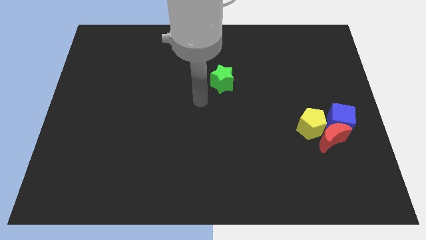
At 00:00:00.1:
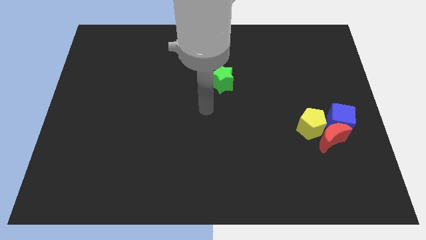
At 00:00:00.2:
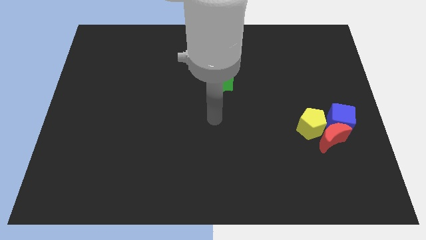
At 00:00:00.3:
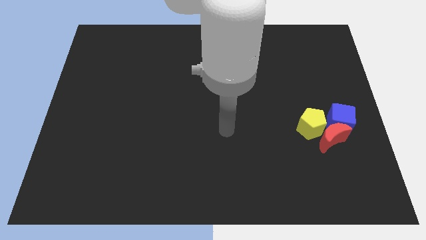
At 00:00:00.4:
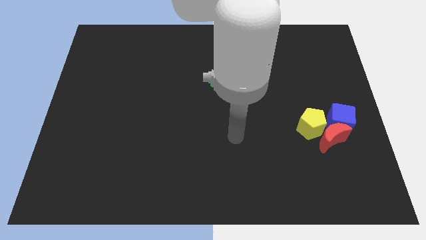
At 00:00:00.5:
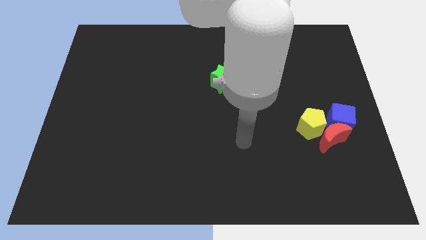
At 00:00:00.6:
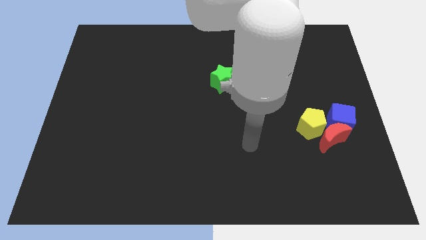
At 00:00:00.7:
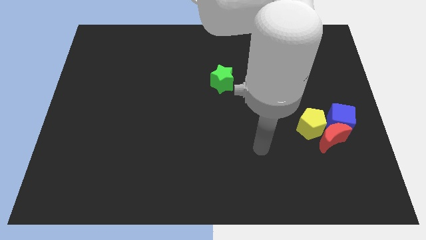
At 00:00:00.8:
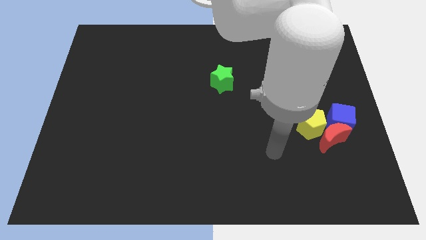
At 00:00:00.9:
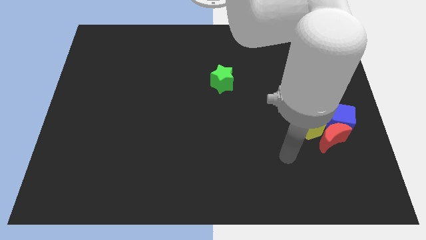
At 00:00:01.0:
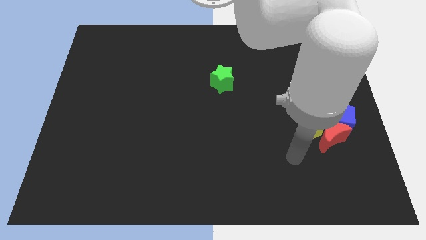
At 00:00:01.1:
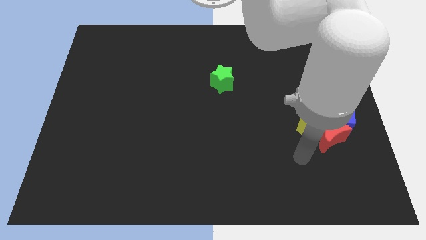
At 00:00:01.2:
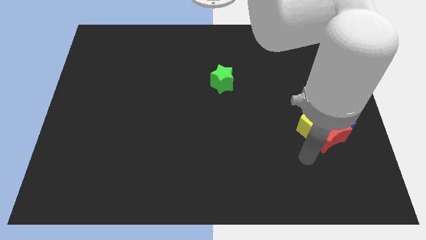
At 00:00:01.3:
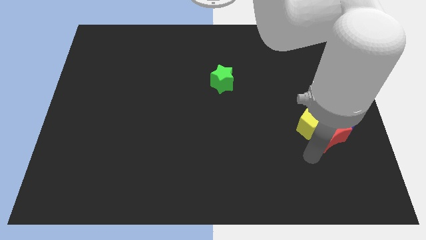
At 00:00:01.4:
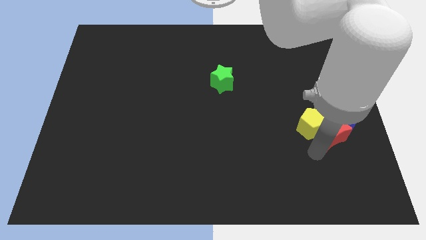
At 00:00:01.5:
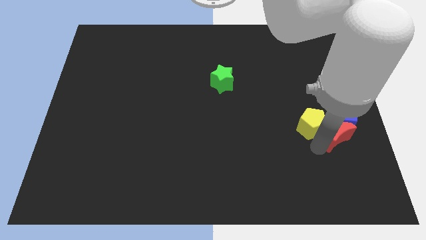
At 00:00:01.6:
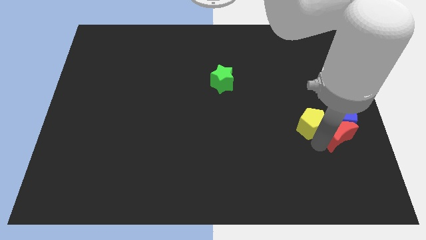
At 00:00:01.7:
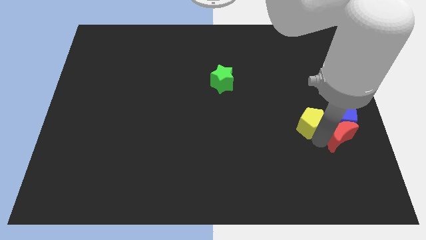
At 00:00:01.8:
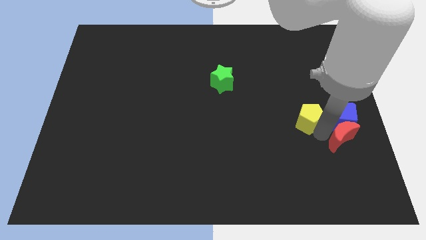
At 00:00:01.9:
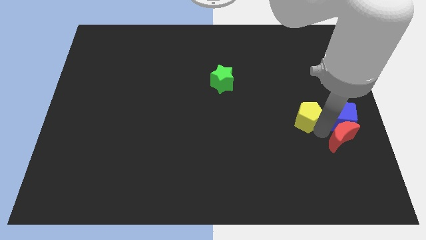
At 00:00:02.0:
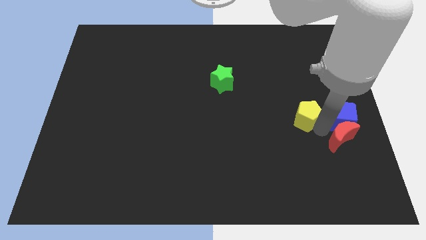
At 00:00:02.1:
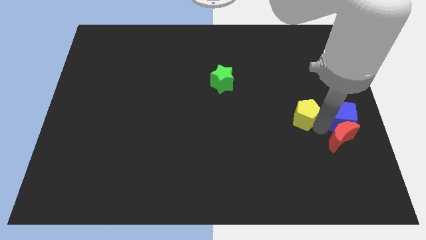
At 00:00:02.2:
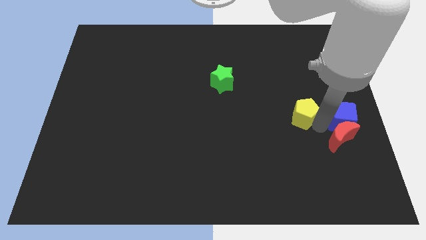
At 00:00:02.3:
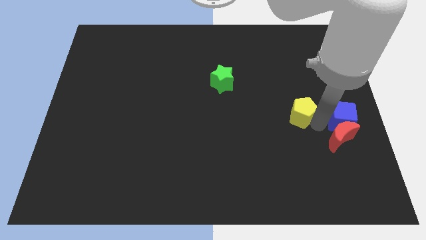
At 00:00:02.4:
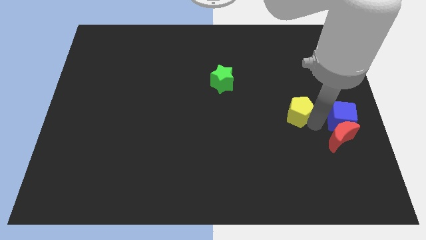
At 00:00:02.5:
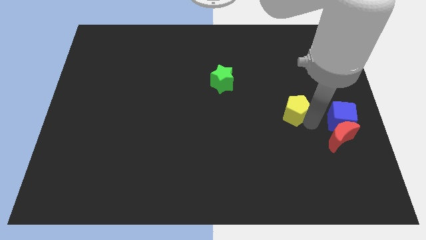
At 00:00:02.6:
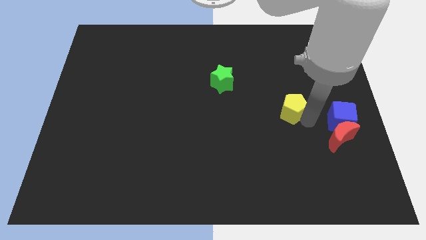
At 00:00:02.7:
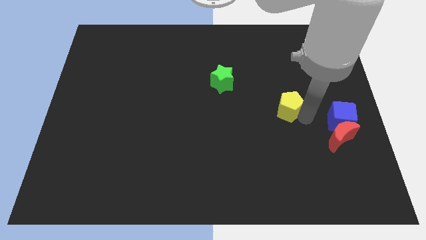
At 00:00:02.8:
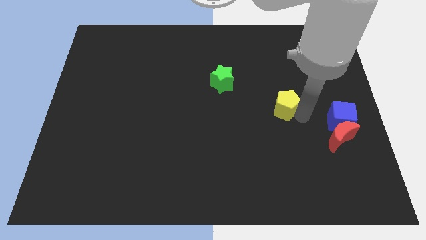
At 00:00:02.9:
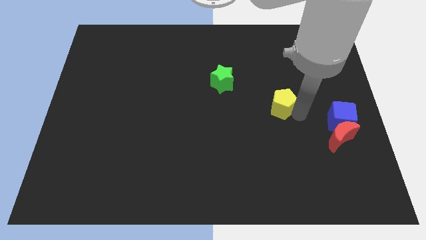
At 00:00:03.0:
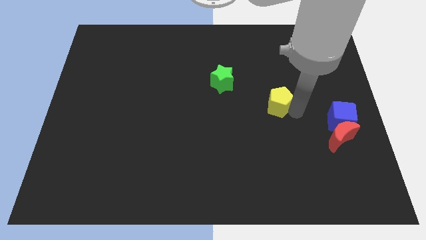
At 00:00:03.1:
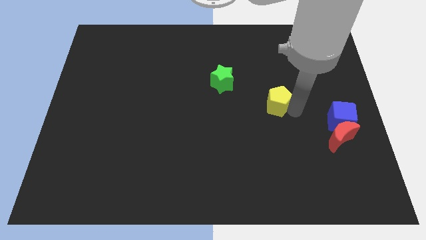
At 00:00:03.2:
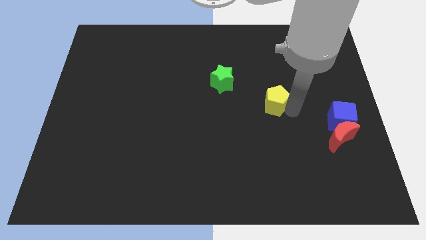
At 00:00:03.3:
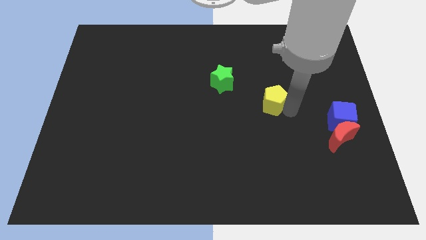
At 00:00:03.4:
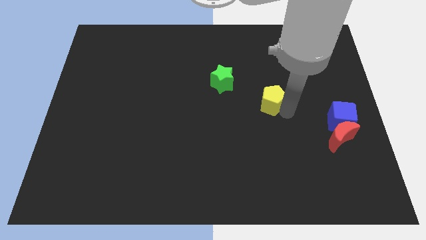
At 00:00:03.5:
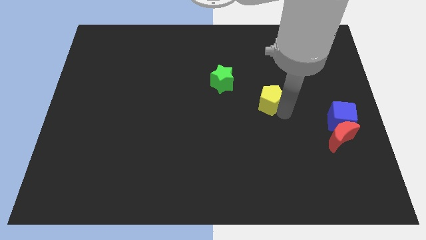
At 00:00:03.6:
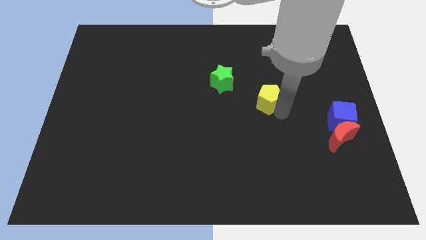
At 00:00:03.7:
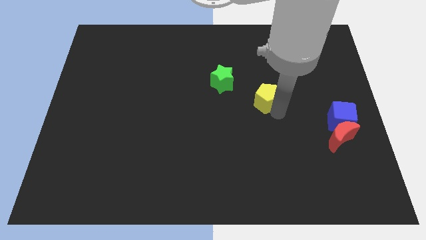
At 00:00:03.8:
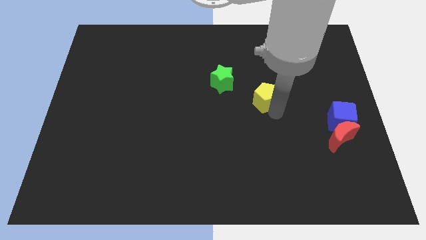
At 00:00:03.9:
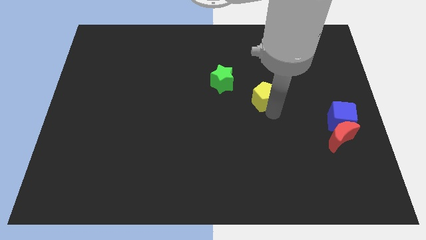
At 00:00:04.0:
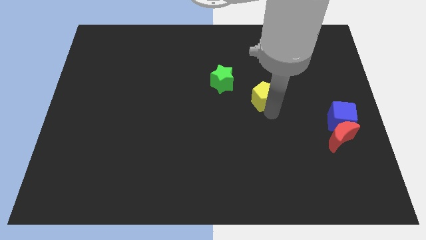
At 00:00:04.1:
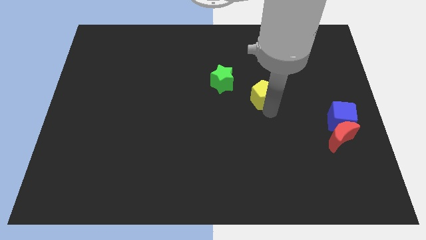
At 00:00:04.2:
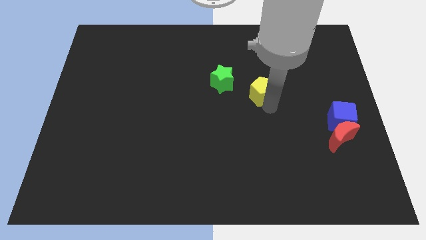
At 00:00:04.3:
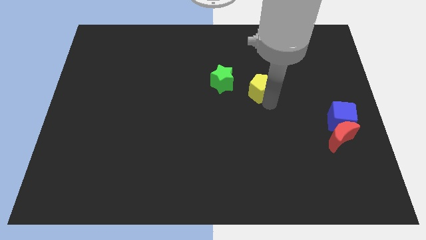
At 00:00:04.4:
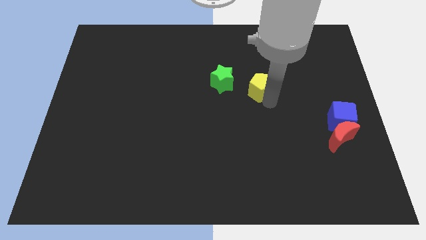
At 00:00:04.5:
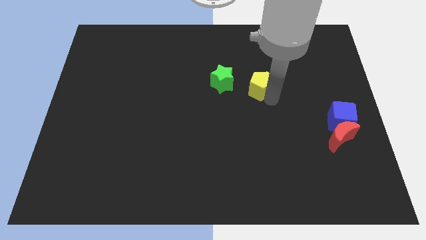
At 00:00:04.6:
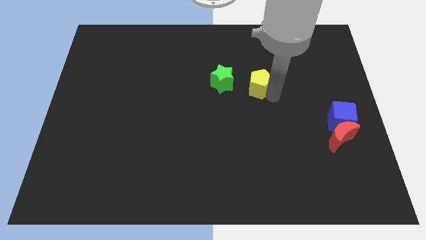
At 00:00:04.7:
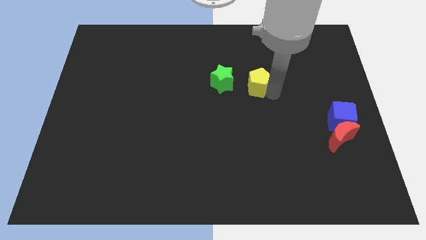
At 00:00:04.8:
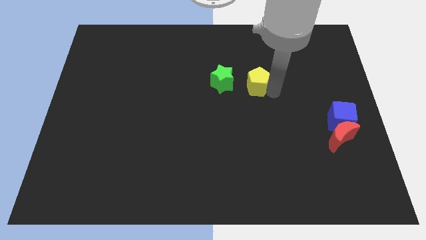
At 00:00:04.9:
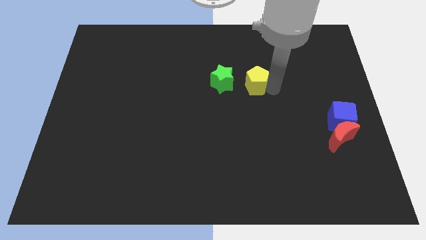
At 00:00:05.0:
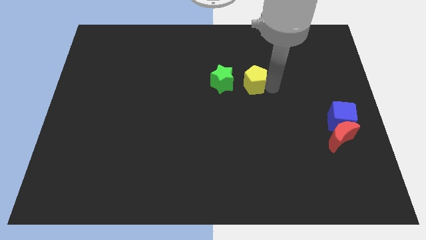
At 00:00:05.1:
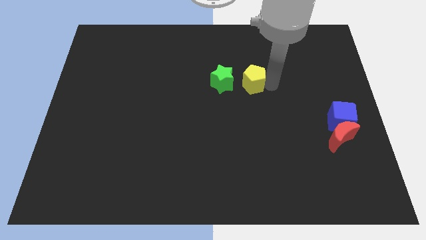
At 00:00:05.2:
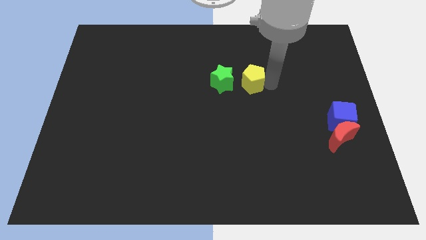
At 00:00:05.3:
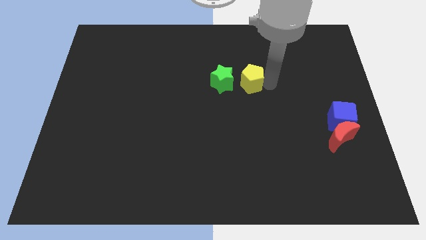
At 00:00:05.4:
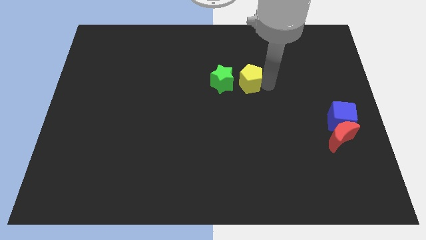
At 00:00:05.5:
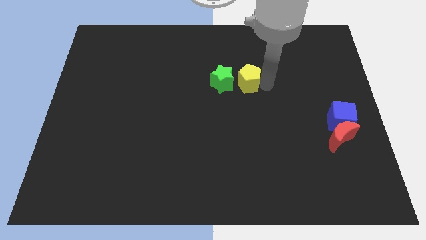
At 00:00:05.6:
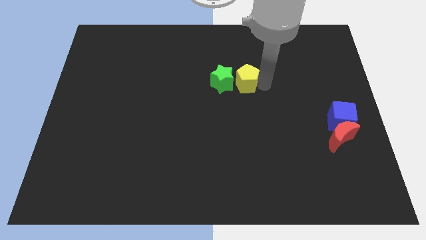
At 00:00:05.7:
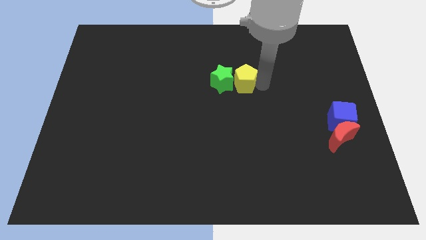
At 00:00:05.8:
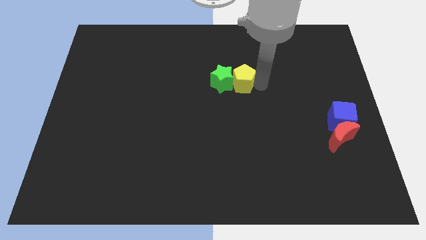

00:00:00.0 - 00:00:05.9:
push the yellow pentagon close to the star

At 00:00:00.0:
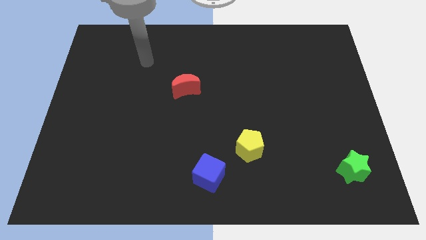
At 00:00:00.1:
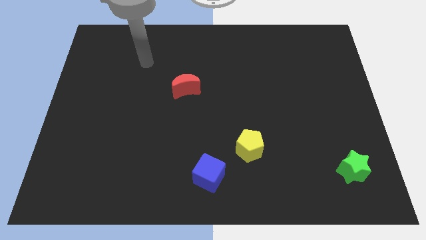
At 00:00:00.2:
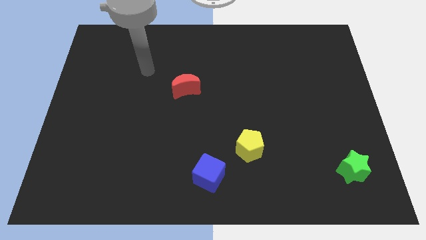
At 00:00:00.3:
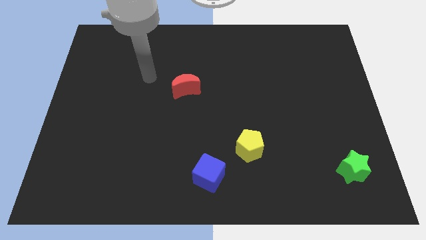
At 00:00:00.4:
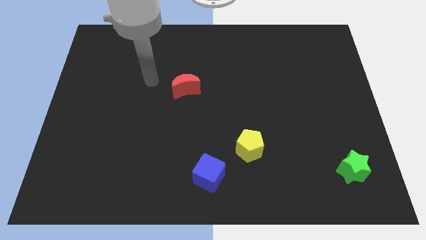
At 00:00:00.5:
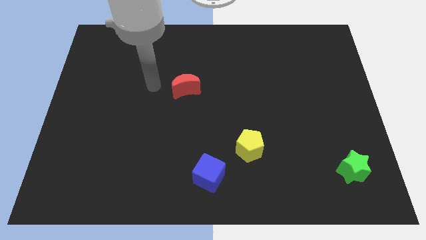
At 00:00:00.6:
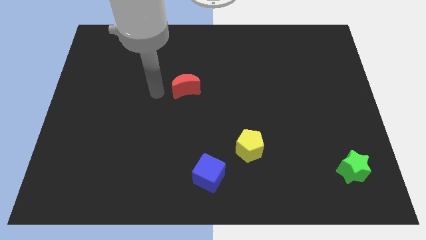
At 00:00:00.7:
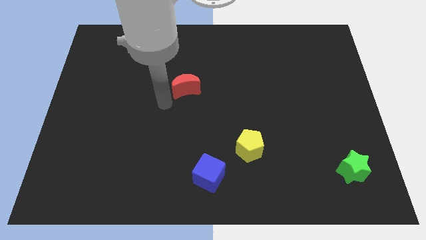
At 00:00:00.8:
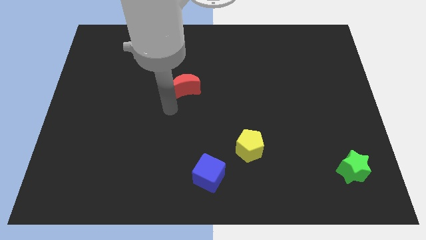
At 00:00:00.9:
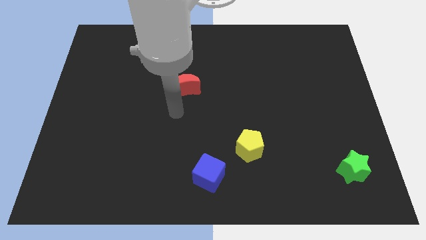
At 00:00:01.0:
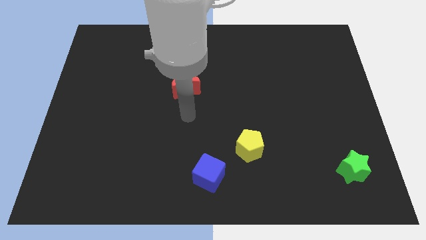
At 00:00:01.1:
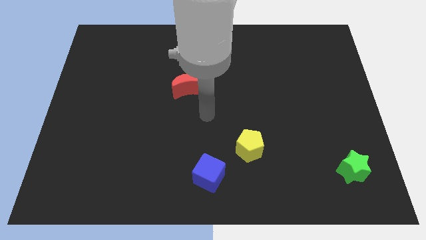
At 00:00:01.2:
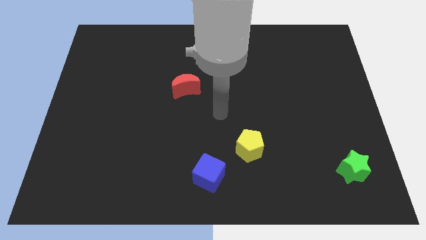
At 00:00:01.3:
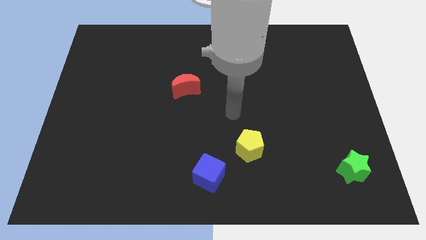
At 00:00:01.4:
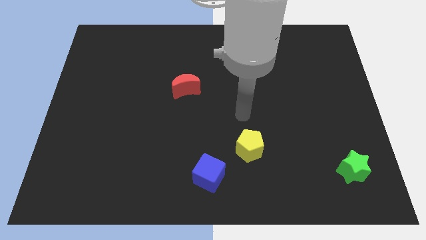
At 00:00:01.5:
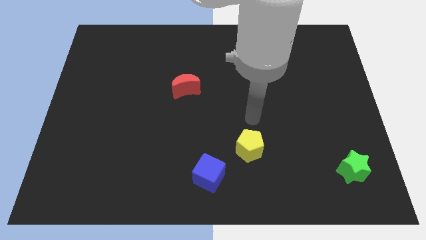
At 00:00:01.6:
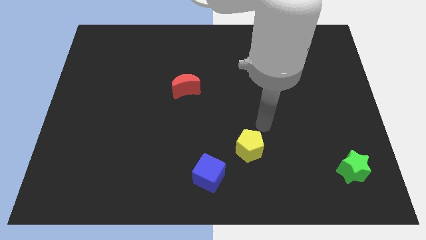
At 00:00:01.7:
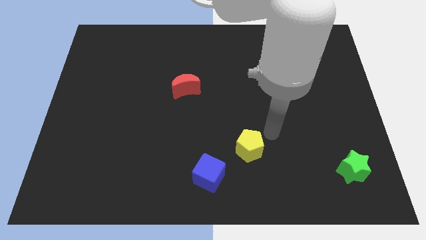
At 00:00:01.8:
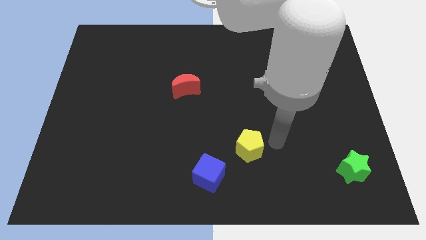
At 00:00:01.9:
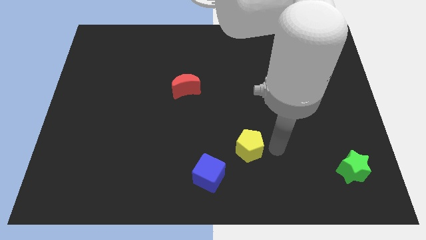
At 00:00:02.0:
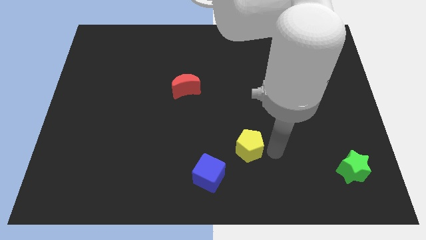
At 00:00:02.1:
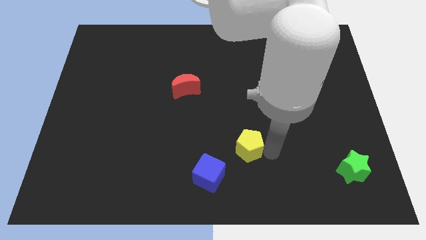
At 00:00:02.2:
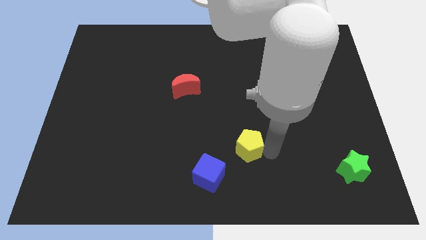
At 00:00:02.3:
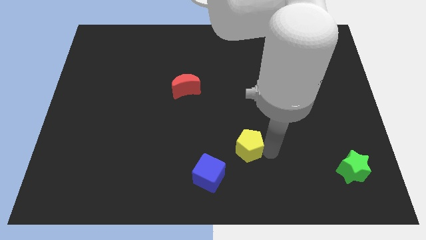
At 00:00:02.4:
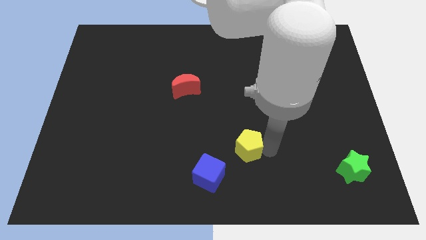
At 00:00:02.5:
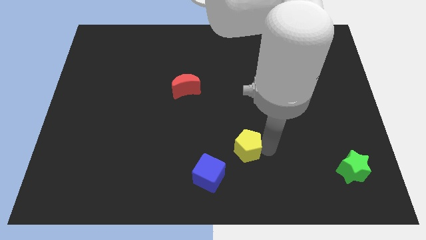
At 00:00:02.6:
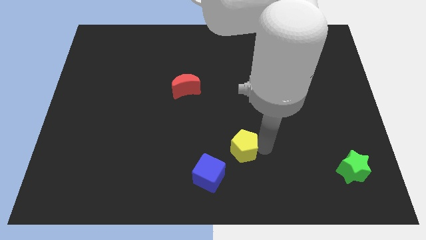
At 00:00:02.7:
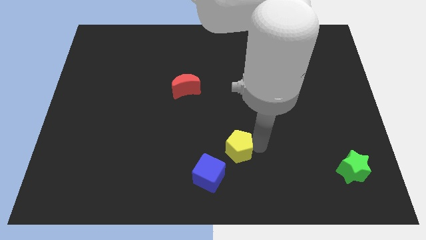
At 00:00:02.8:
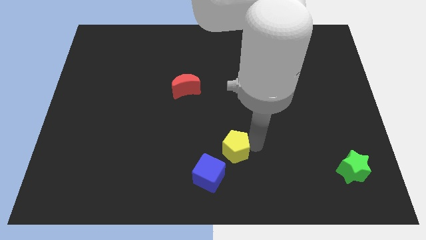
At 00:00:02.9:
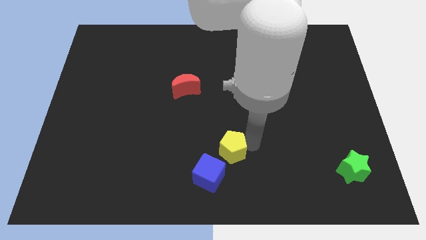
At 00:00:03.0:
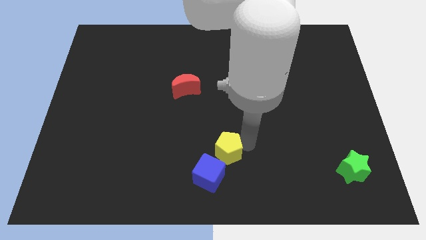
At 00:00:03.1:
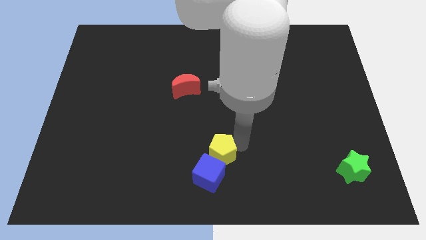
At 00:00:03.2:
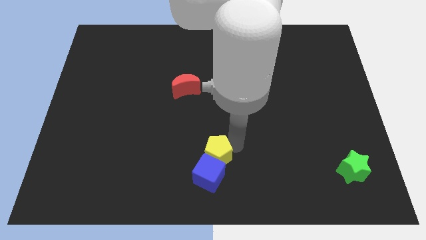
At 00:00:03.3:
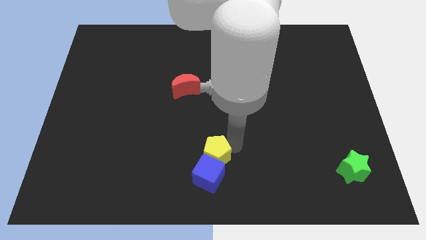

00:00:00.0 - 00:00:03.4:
push the pentagon to the blue block
